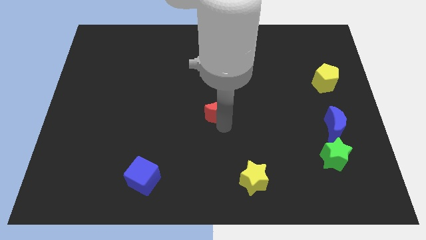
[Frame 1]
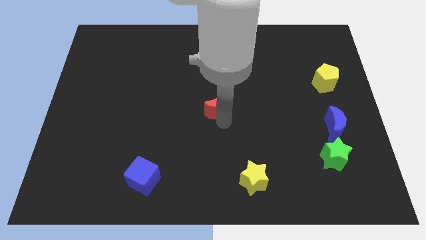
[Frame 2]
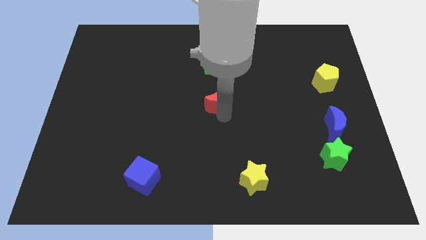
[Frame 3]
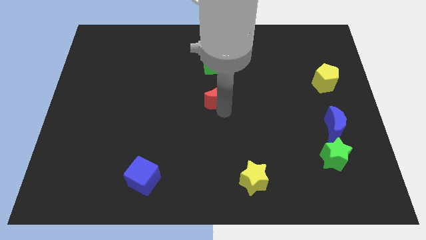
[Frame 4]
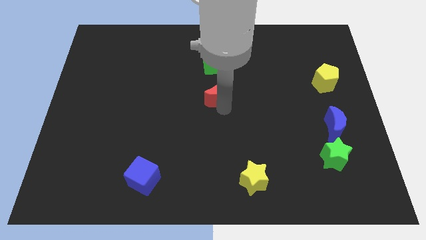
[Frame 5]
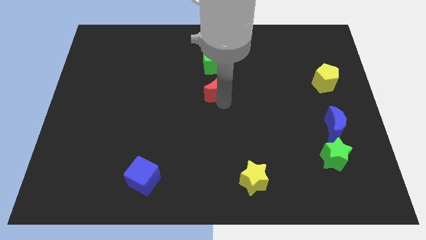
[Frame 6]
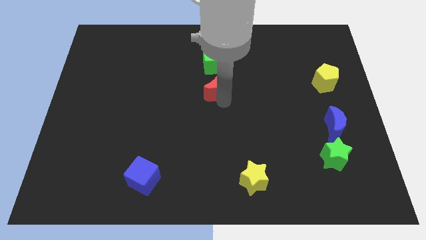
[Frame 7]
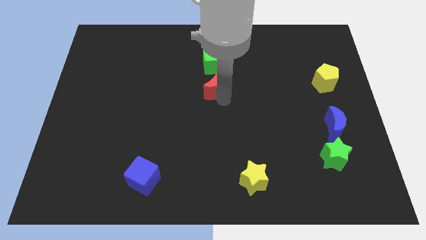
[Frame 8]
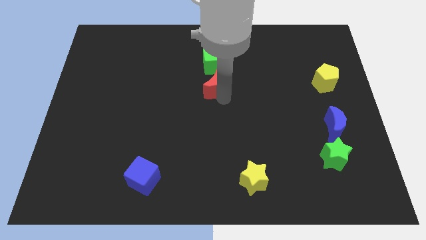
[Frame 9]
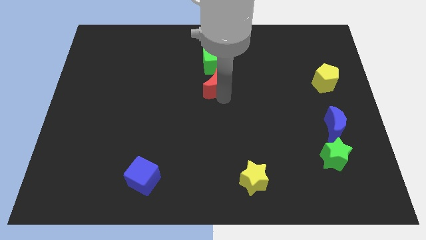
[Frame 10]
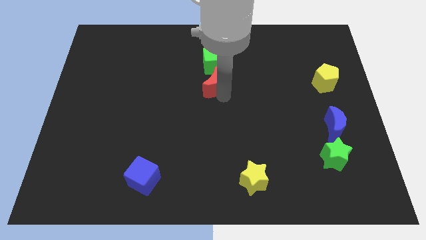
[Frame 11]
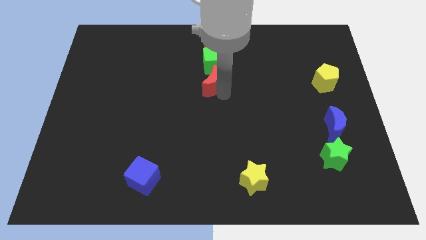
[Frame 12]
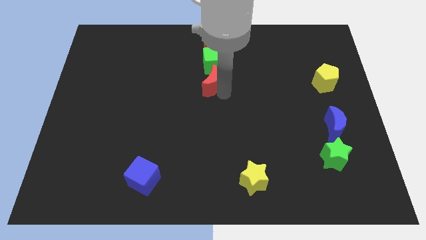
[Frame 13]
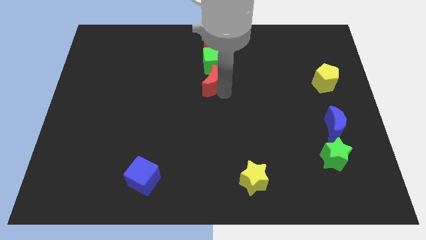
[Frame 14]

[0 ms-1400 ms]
place red moon below the green cube

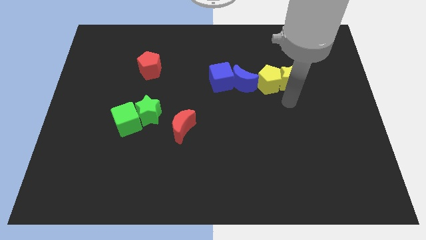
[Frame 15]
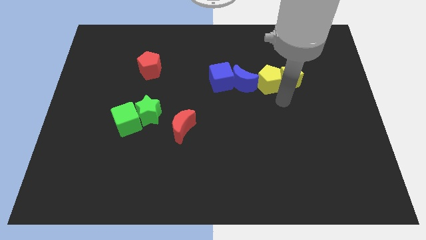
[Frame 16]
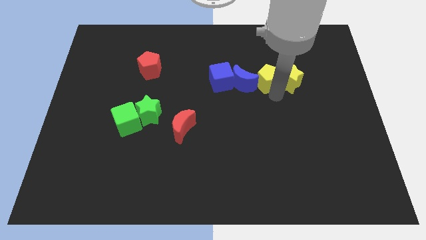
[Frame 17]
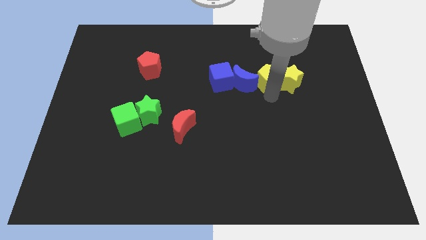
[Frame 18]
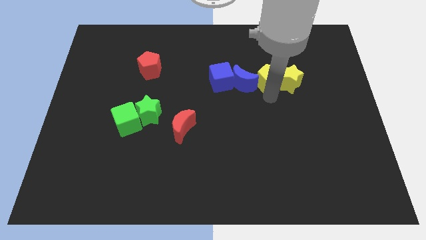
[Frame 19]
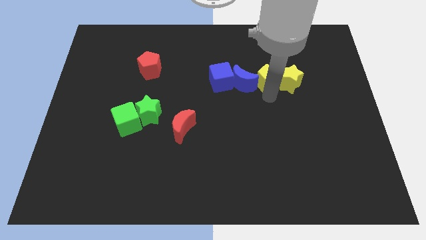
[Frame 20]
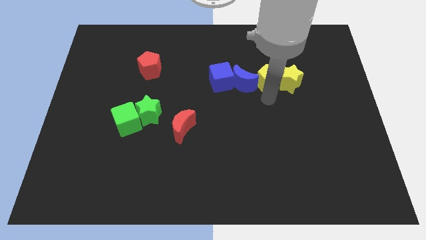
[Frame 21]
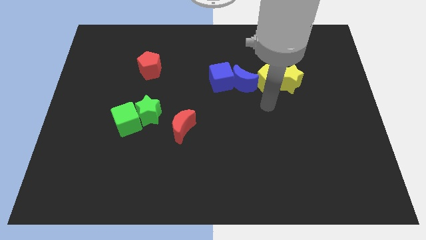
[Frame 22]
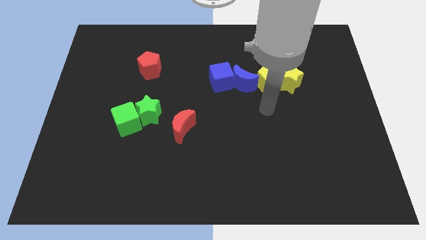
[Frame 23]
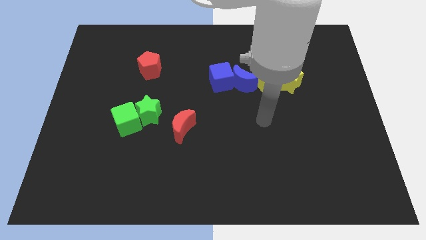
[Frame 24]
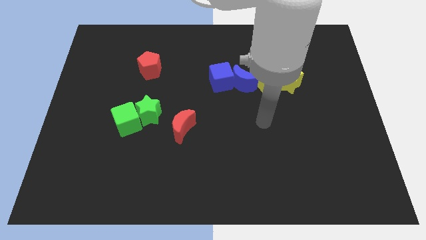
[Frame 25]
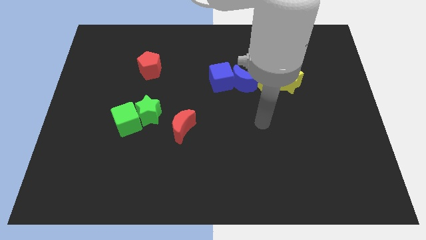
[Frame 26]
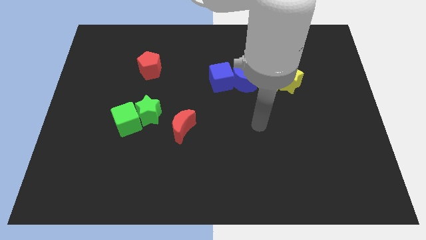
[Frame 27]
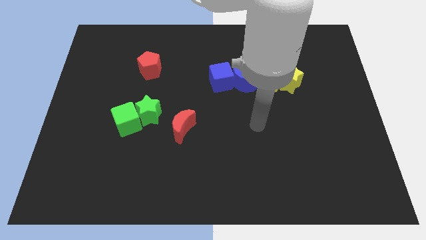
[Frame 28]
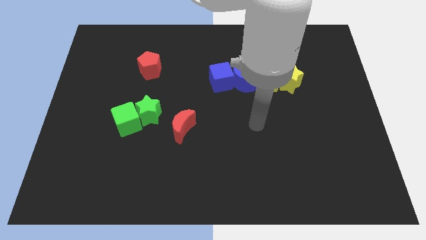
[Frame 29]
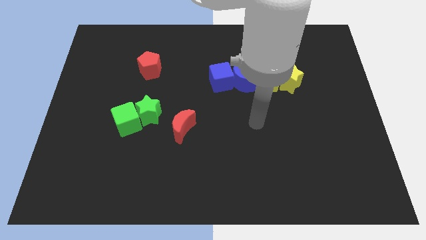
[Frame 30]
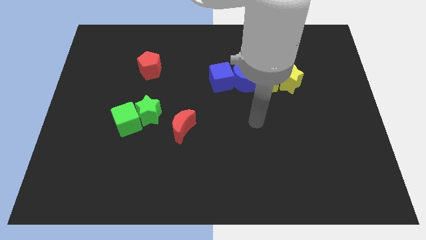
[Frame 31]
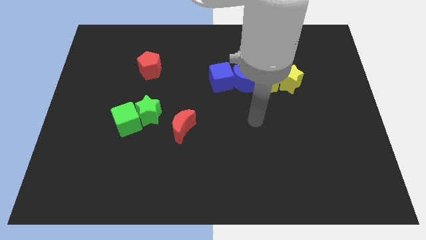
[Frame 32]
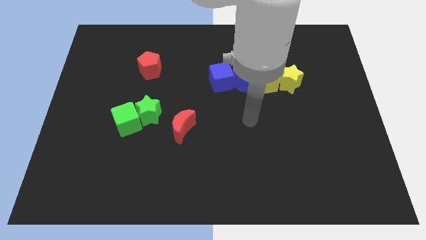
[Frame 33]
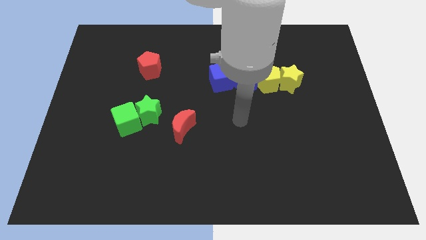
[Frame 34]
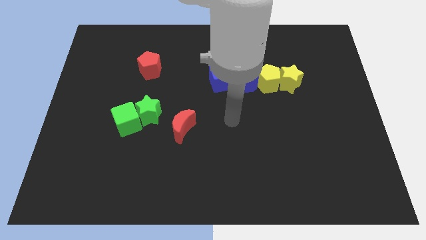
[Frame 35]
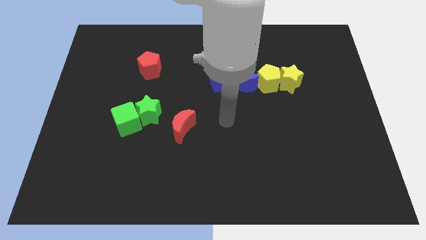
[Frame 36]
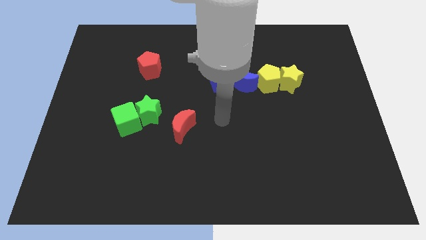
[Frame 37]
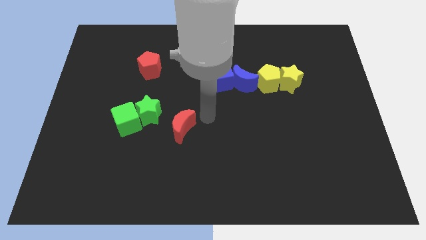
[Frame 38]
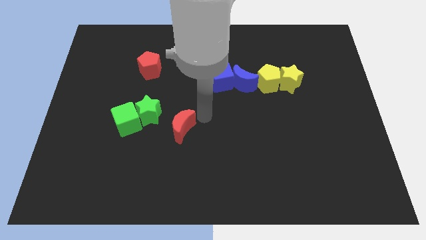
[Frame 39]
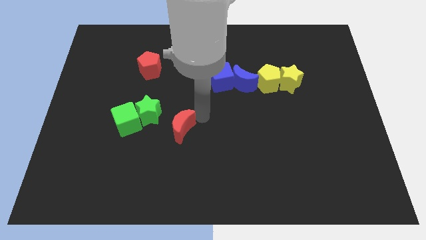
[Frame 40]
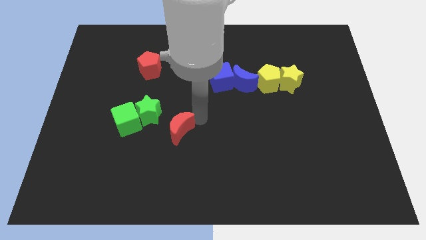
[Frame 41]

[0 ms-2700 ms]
place the arm to the right side of the red moon

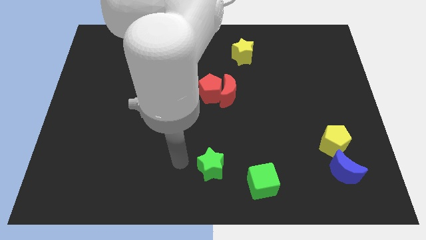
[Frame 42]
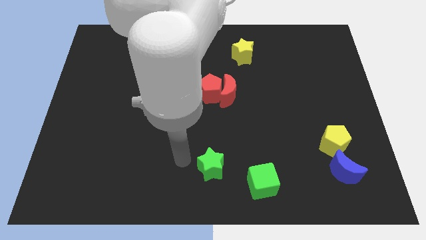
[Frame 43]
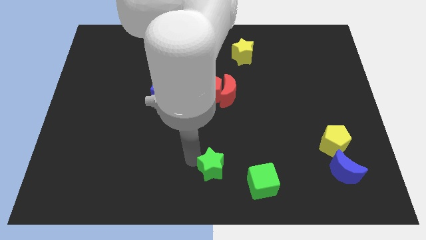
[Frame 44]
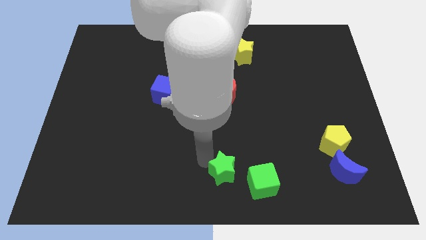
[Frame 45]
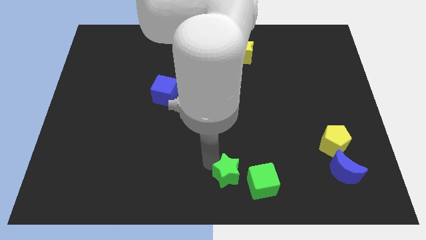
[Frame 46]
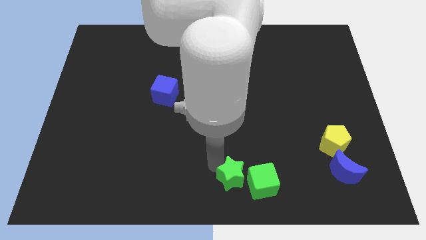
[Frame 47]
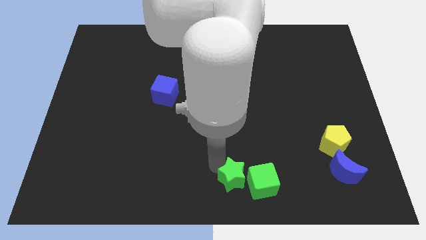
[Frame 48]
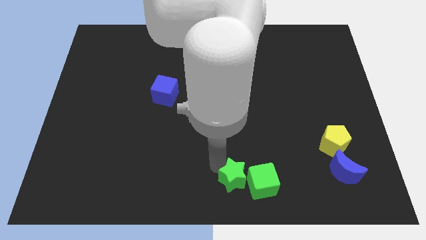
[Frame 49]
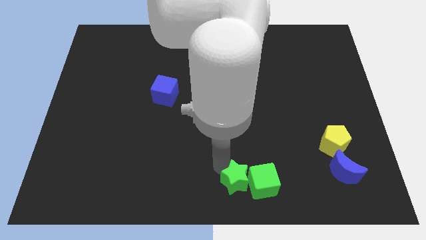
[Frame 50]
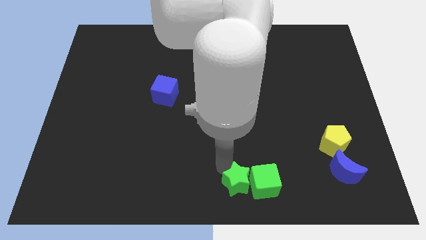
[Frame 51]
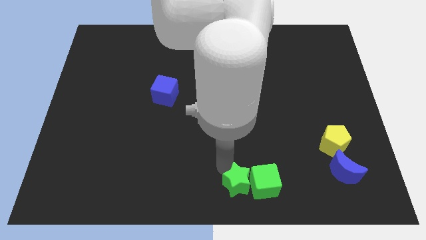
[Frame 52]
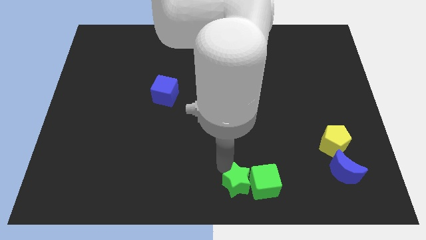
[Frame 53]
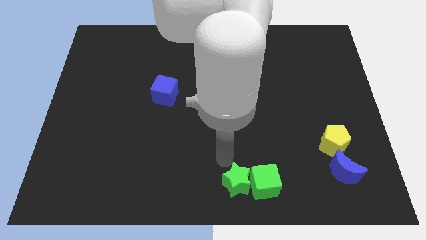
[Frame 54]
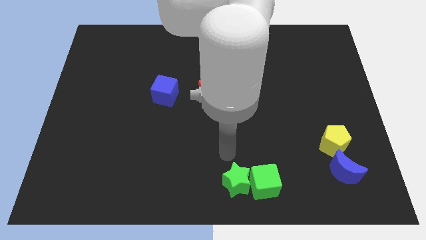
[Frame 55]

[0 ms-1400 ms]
move green star into the green cube

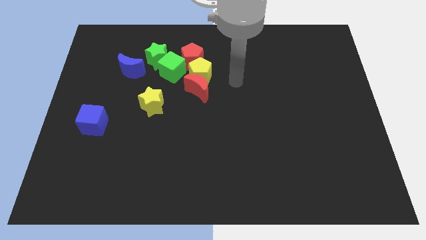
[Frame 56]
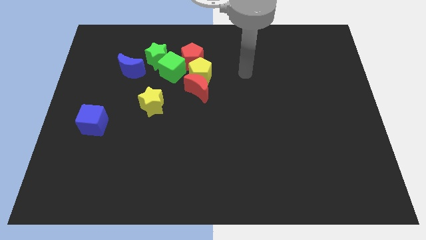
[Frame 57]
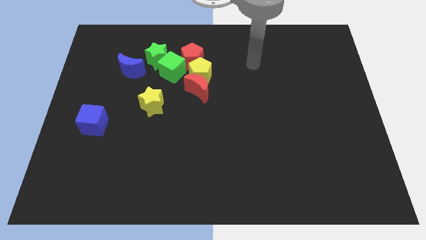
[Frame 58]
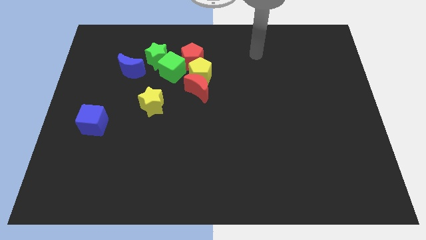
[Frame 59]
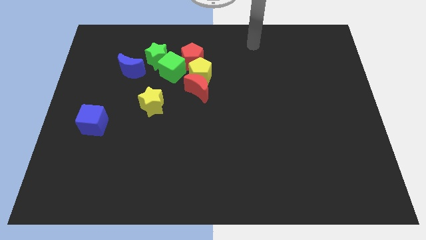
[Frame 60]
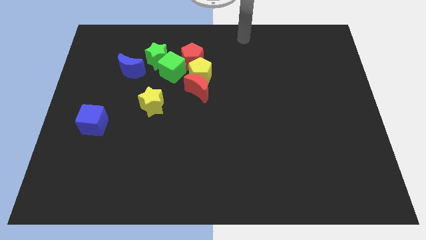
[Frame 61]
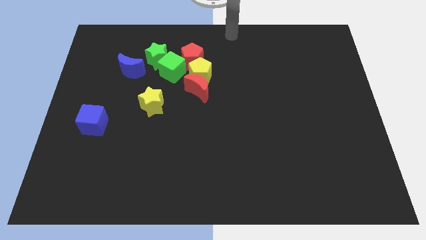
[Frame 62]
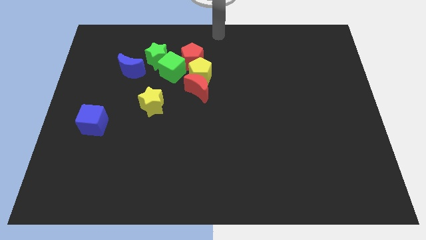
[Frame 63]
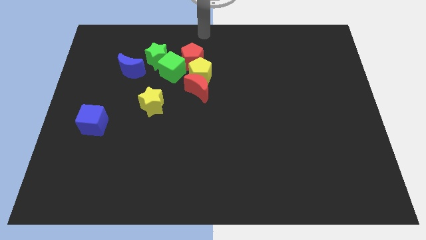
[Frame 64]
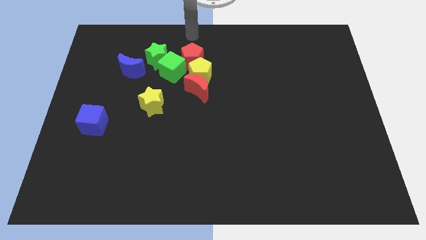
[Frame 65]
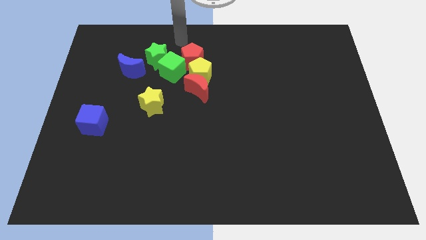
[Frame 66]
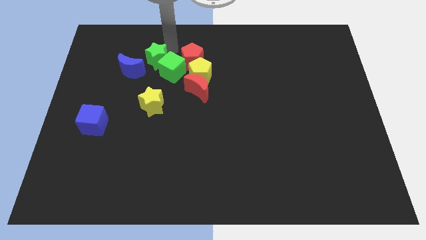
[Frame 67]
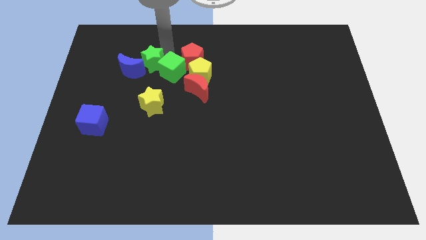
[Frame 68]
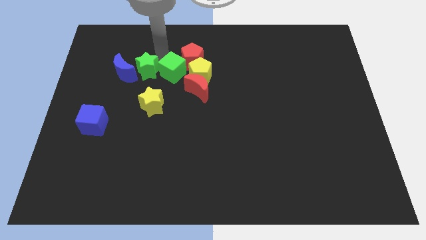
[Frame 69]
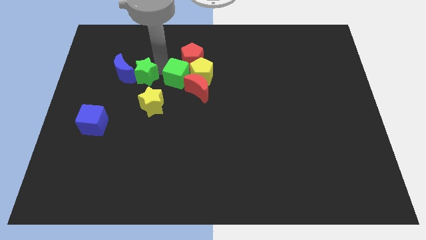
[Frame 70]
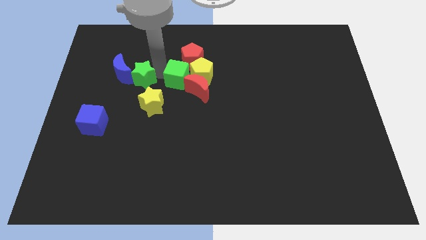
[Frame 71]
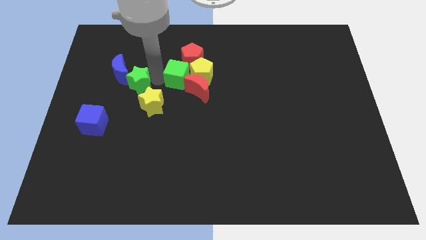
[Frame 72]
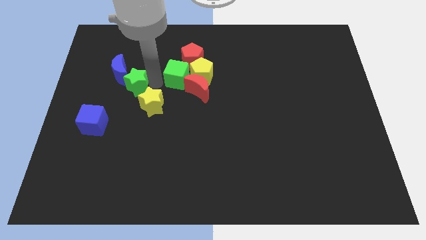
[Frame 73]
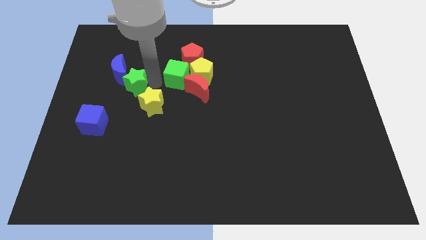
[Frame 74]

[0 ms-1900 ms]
place your arm between green star and green cube

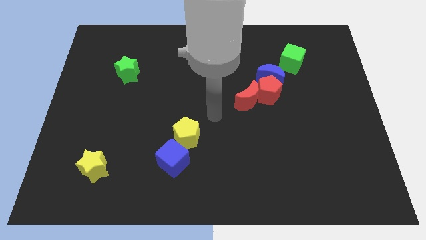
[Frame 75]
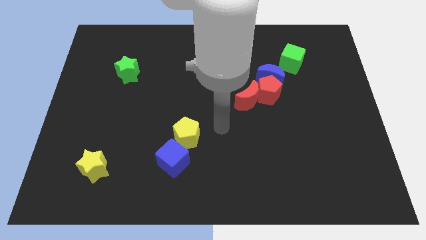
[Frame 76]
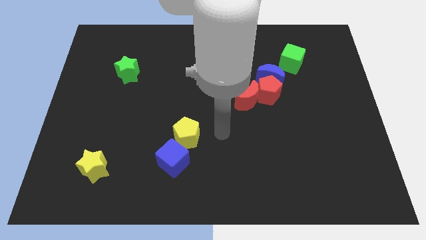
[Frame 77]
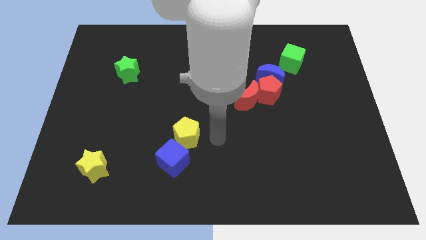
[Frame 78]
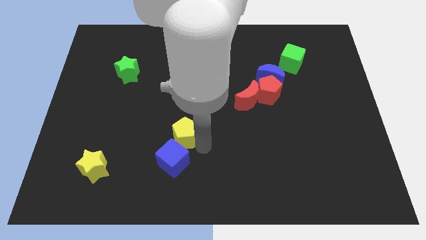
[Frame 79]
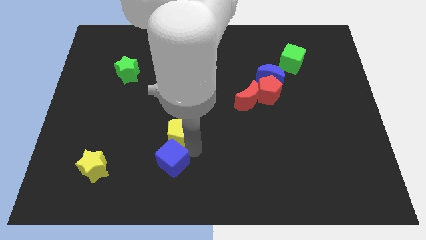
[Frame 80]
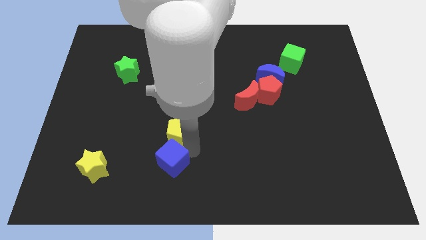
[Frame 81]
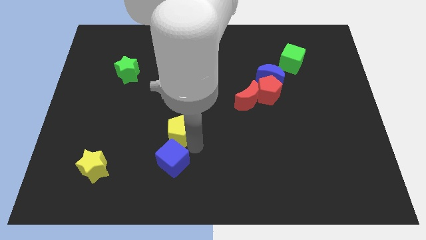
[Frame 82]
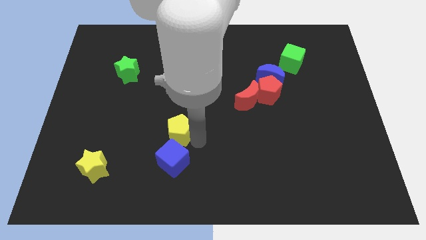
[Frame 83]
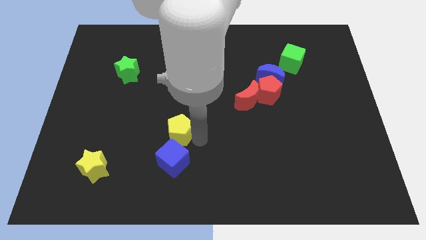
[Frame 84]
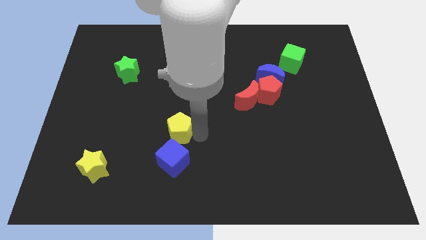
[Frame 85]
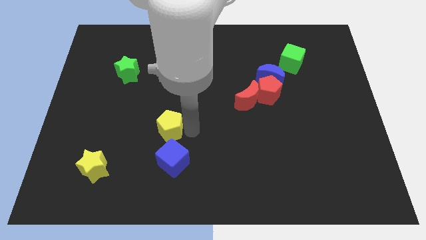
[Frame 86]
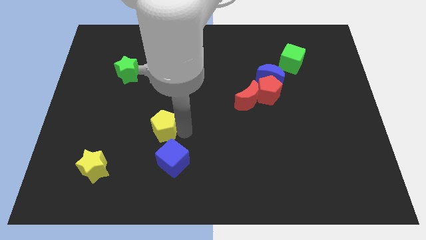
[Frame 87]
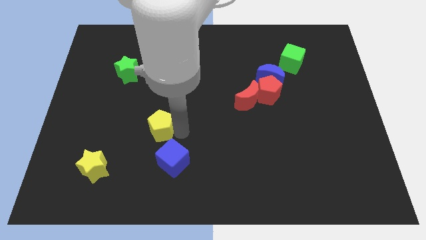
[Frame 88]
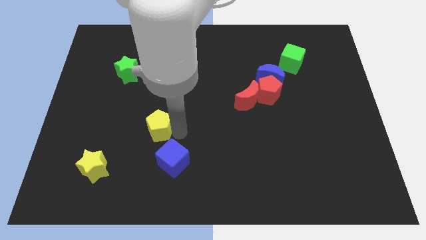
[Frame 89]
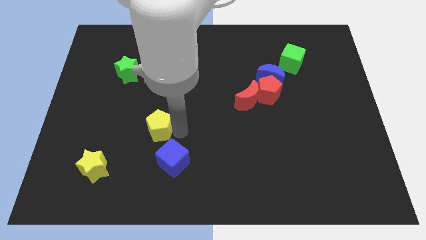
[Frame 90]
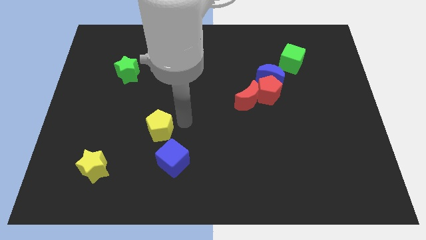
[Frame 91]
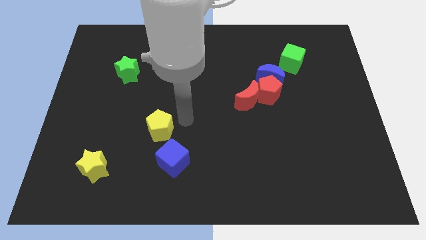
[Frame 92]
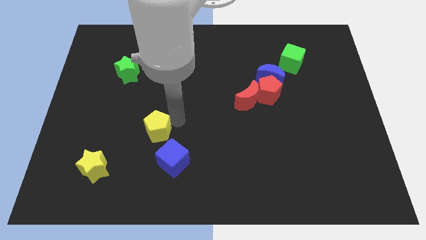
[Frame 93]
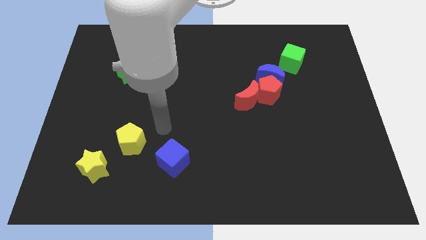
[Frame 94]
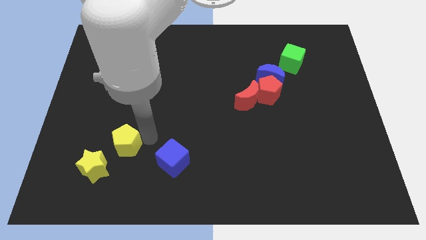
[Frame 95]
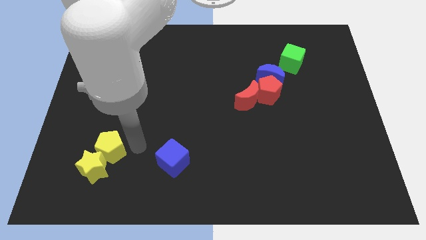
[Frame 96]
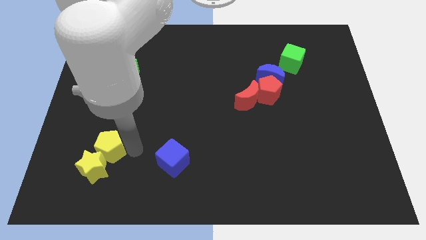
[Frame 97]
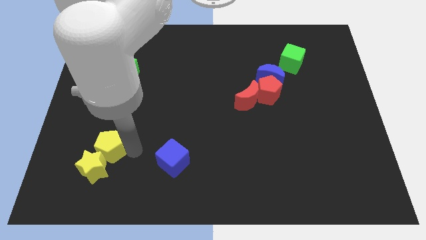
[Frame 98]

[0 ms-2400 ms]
move the yellow pentagon into the yellow star
